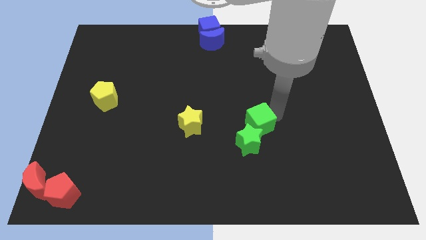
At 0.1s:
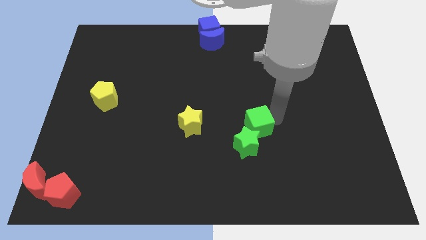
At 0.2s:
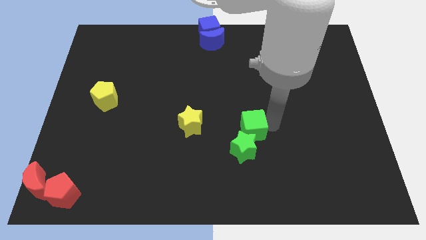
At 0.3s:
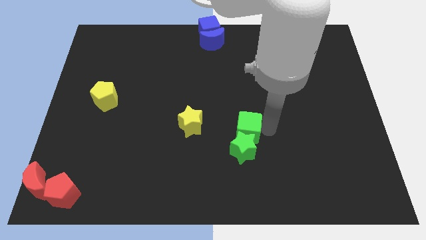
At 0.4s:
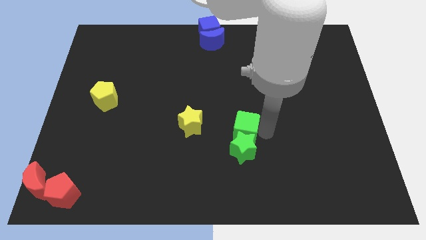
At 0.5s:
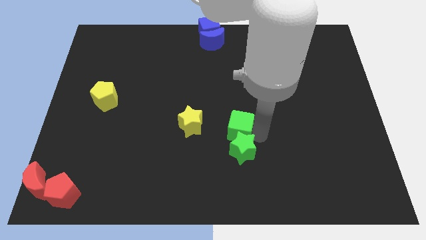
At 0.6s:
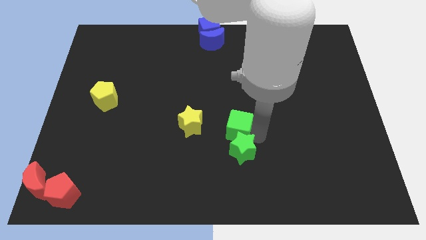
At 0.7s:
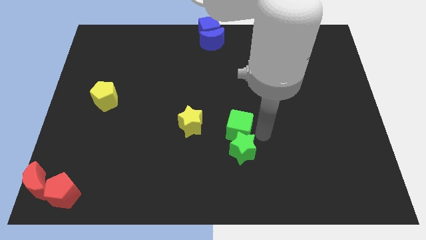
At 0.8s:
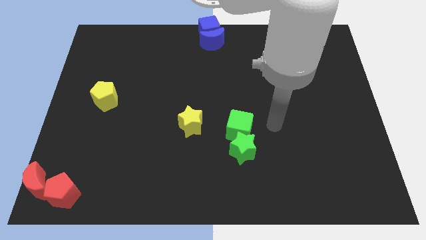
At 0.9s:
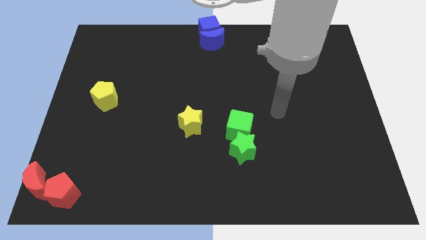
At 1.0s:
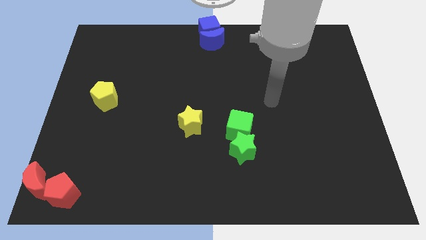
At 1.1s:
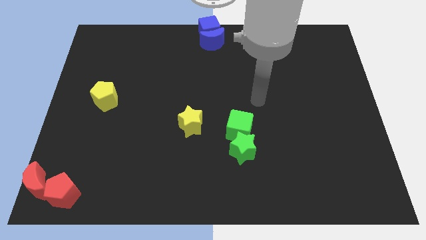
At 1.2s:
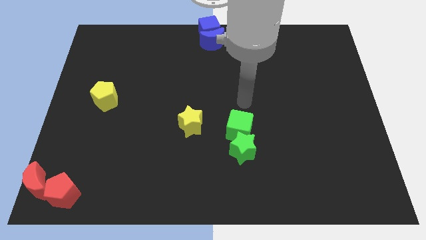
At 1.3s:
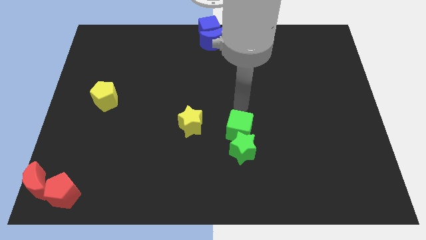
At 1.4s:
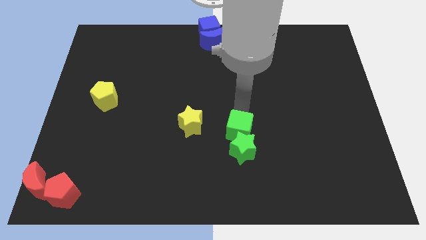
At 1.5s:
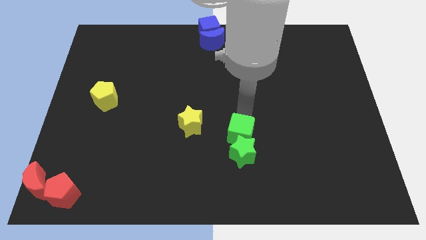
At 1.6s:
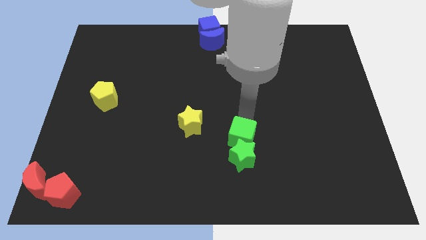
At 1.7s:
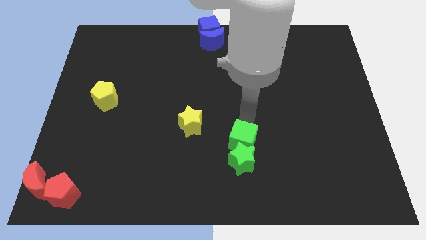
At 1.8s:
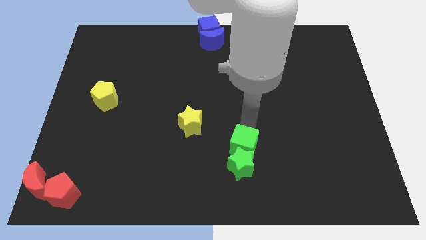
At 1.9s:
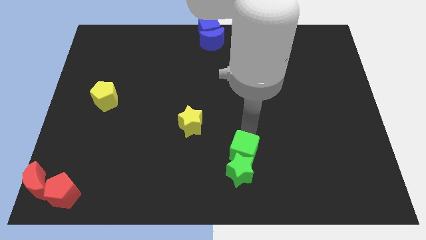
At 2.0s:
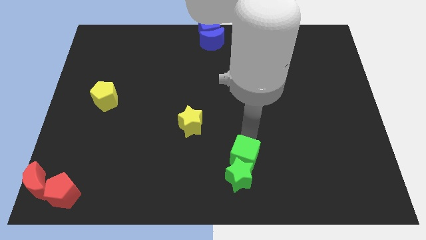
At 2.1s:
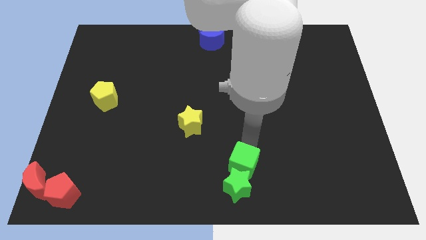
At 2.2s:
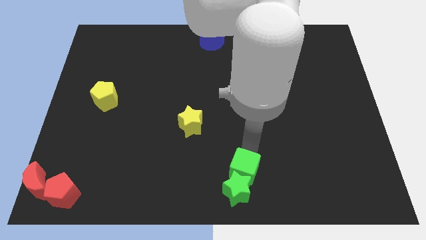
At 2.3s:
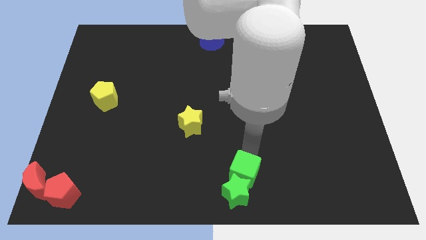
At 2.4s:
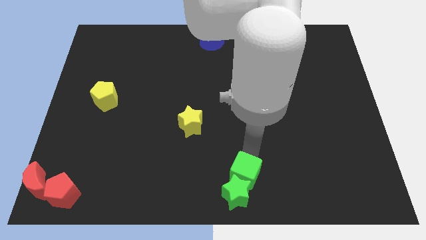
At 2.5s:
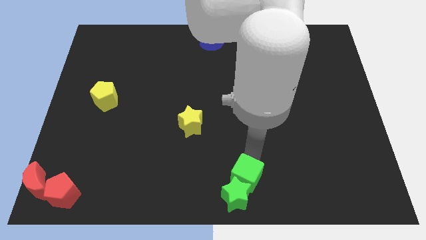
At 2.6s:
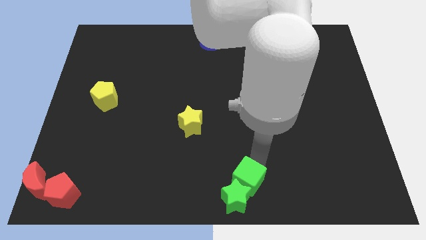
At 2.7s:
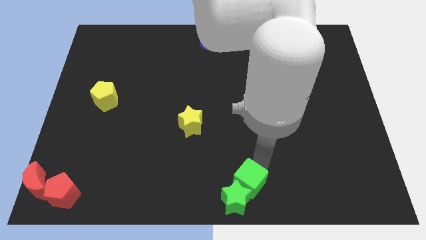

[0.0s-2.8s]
push the green blocks to the bottom center

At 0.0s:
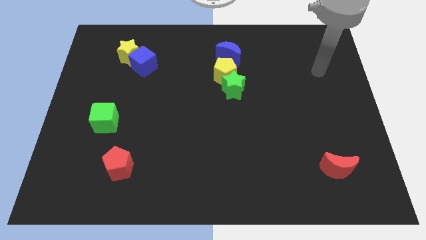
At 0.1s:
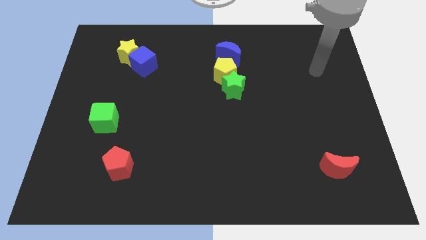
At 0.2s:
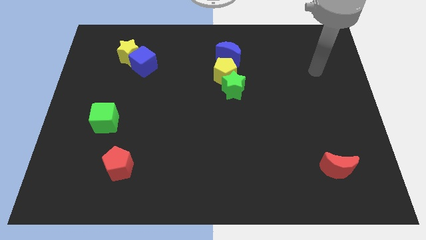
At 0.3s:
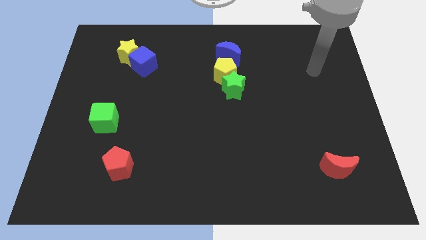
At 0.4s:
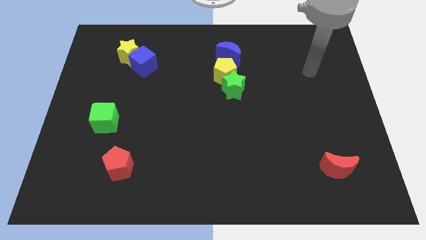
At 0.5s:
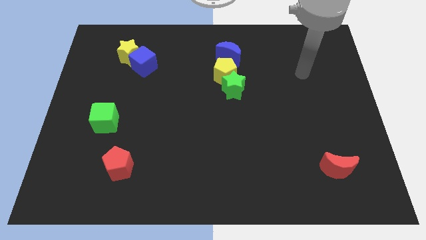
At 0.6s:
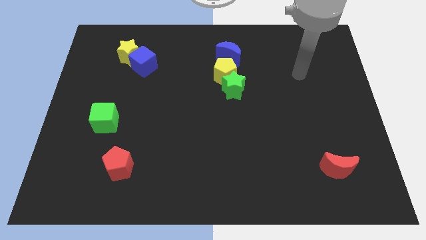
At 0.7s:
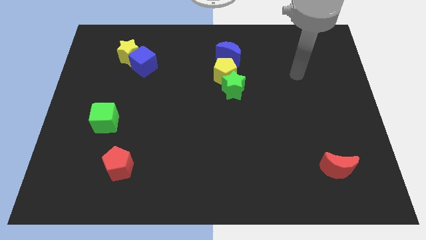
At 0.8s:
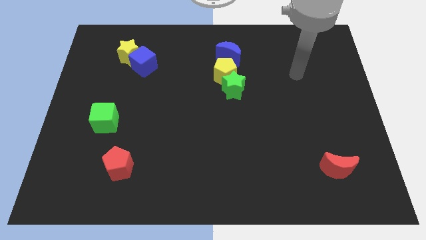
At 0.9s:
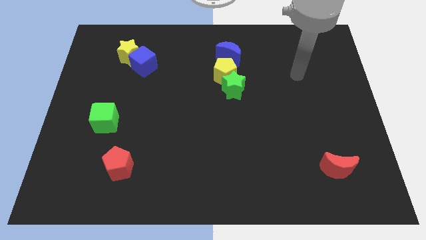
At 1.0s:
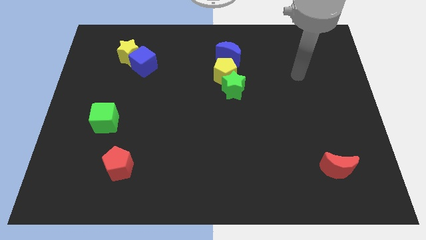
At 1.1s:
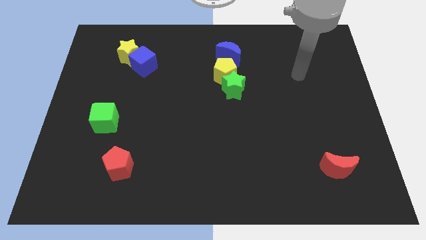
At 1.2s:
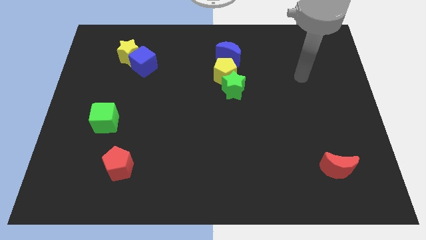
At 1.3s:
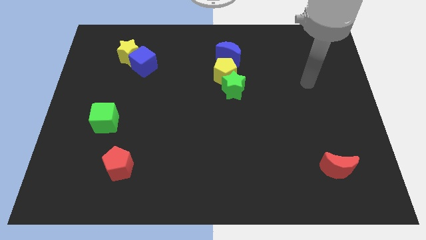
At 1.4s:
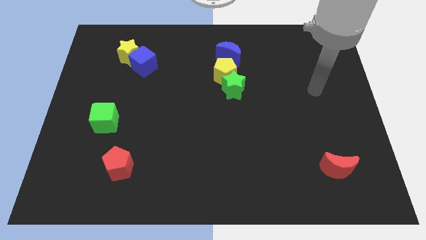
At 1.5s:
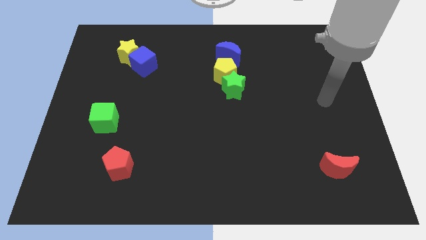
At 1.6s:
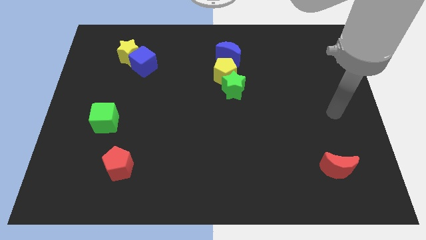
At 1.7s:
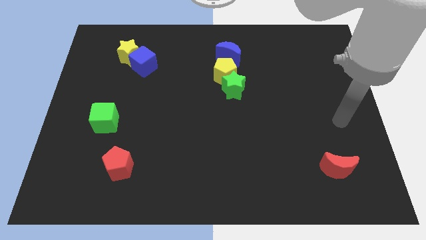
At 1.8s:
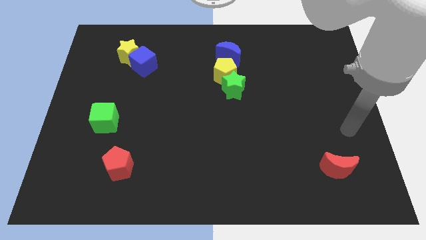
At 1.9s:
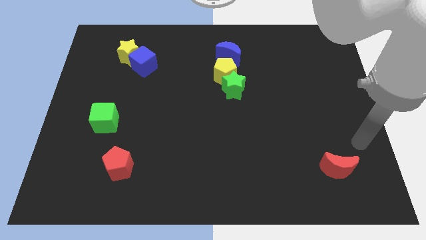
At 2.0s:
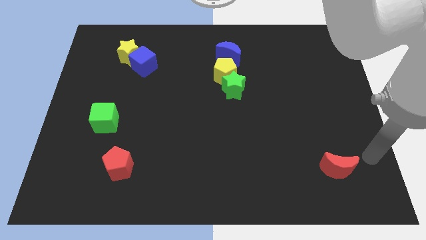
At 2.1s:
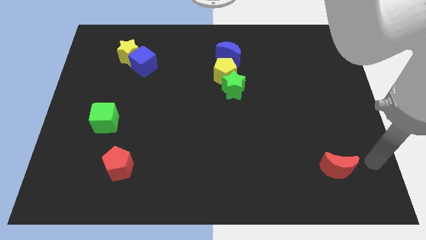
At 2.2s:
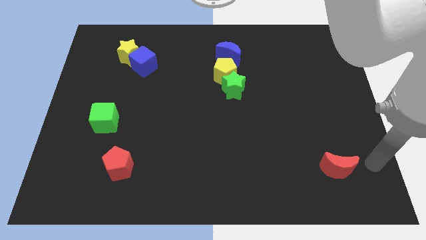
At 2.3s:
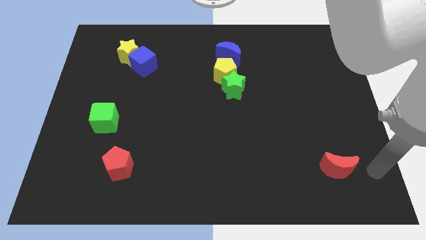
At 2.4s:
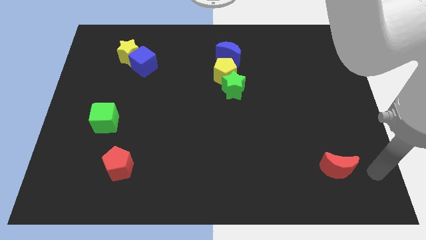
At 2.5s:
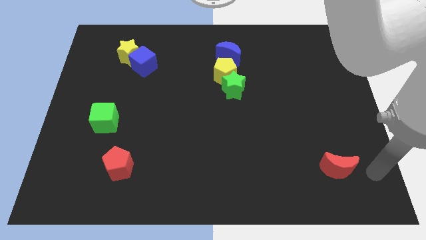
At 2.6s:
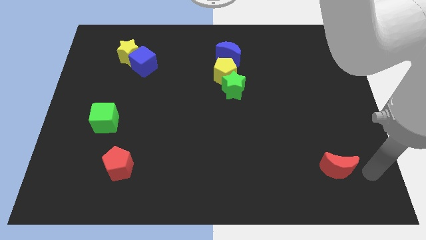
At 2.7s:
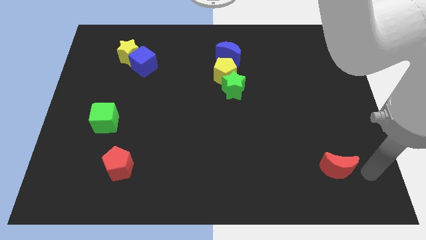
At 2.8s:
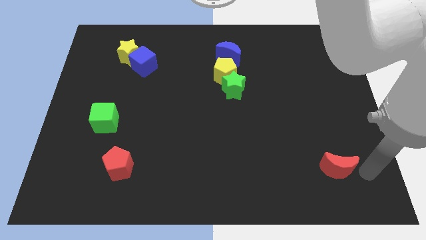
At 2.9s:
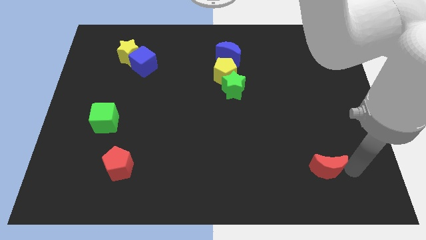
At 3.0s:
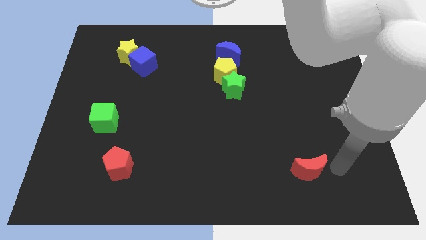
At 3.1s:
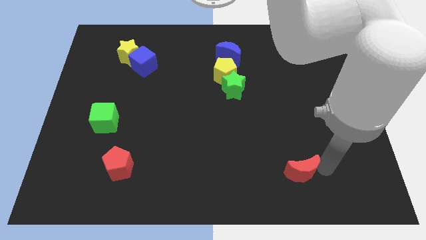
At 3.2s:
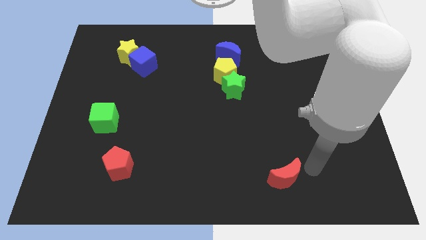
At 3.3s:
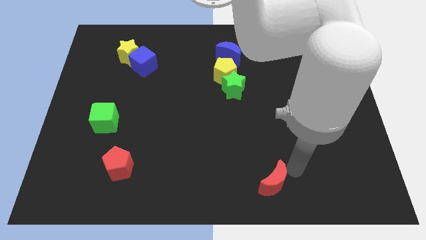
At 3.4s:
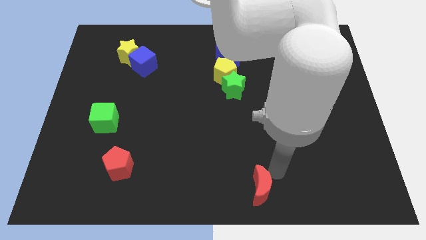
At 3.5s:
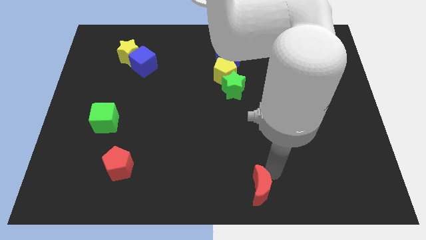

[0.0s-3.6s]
move the red moon slightly left

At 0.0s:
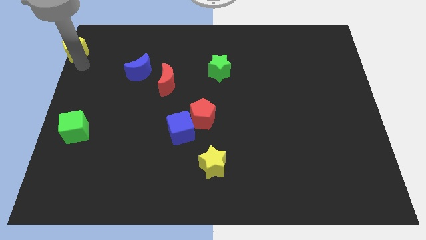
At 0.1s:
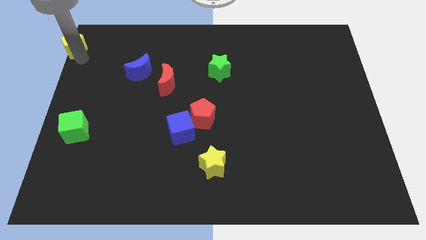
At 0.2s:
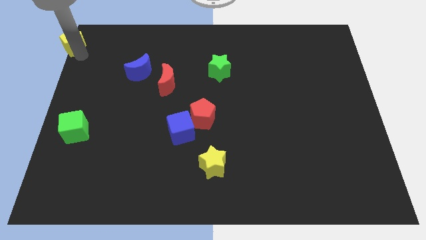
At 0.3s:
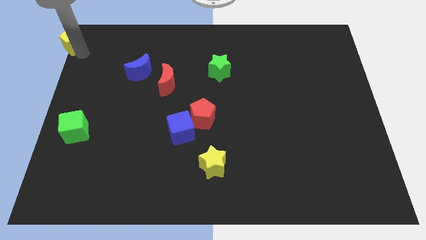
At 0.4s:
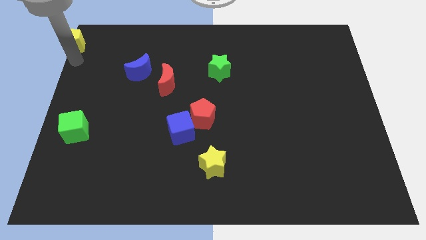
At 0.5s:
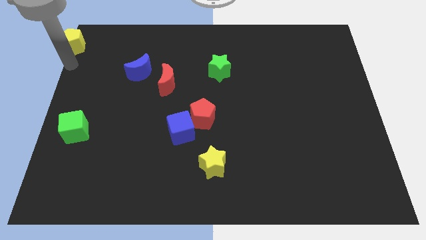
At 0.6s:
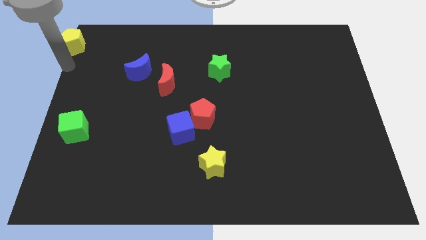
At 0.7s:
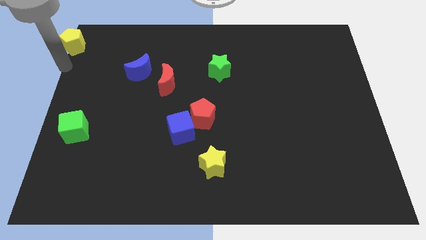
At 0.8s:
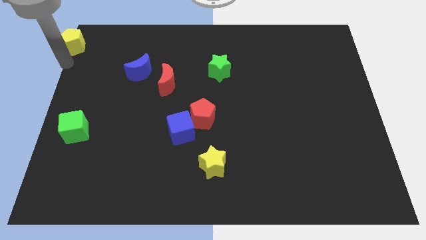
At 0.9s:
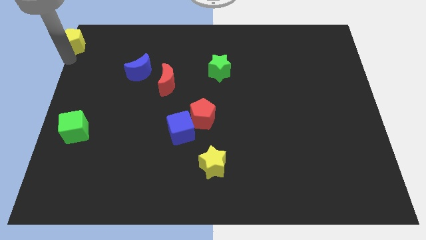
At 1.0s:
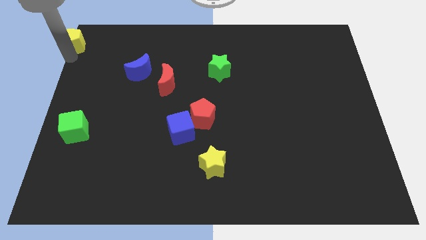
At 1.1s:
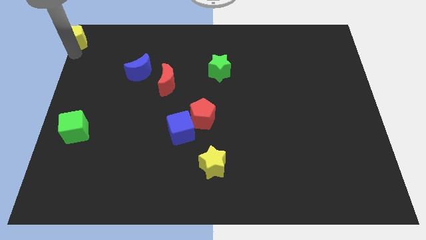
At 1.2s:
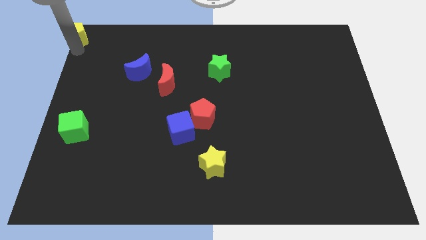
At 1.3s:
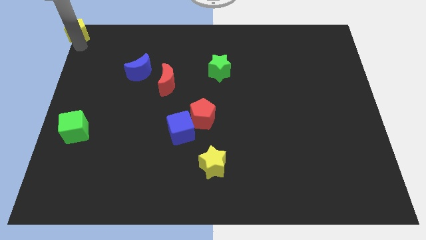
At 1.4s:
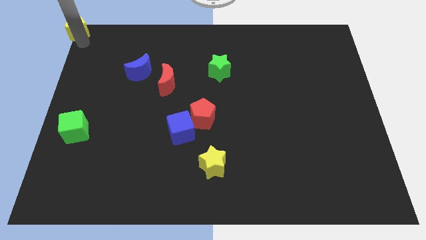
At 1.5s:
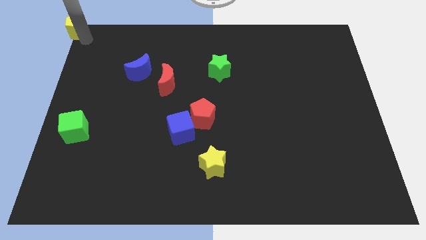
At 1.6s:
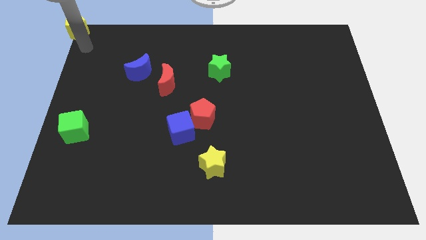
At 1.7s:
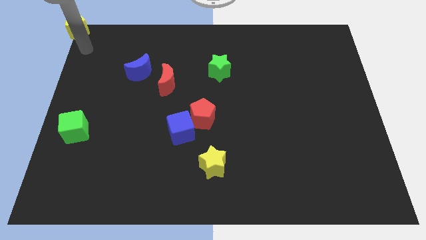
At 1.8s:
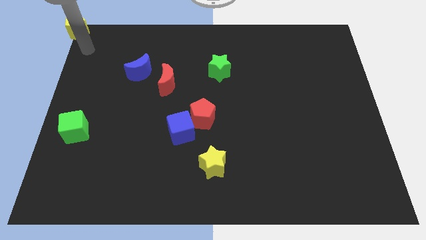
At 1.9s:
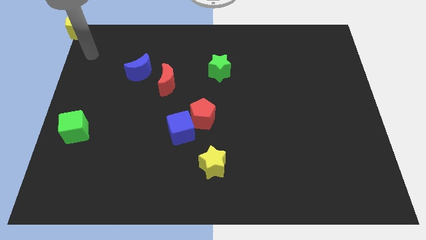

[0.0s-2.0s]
place the yellow pentagon at the top left corner of the board

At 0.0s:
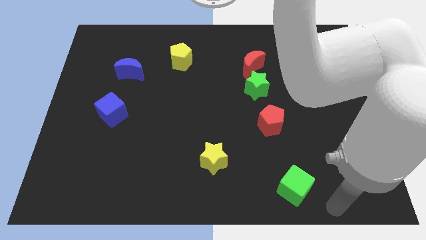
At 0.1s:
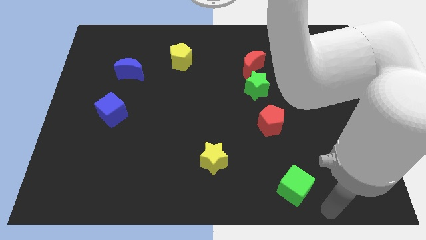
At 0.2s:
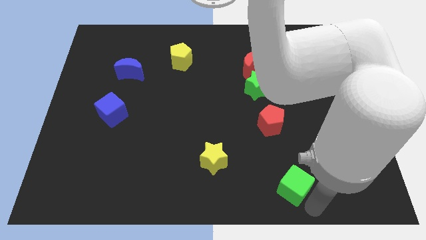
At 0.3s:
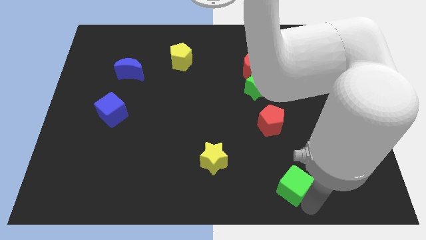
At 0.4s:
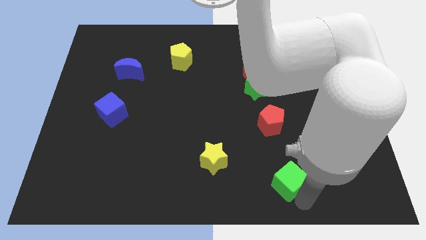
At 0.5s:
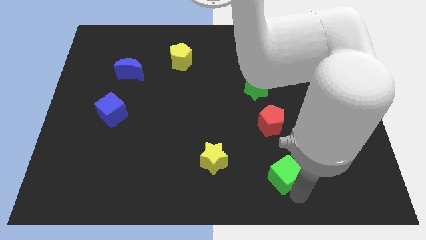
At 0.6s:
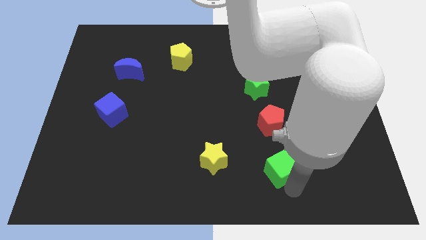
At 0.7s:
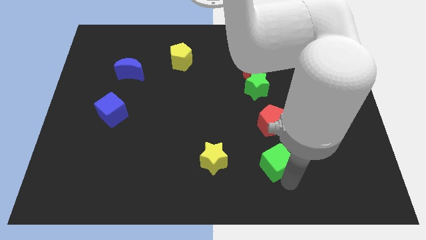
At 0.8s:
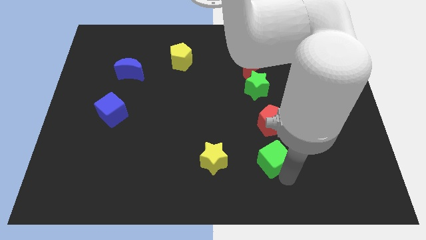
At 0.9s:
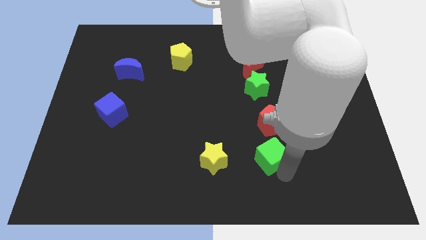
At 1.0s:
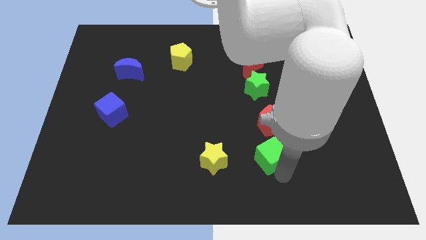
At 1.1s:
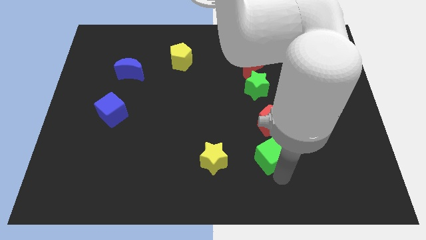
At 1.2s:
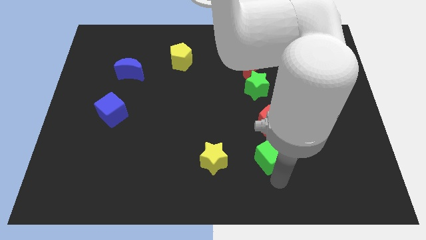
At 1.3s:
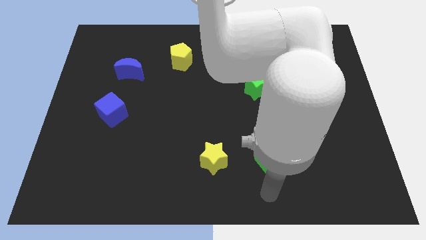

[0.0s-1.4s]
put the green cube parallel to the yellow star
